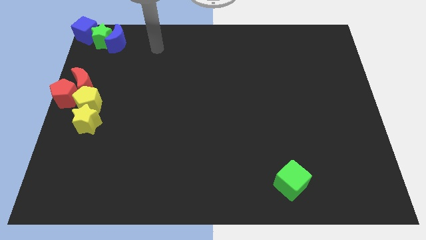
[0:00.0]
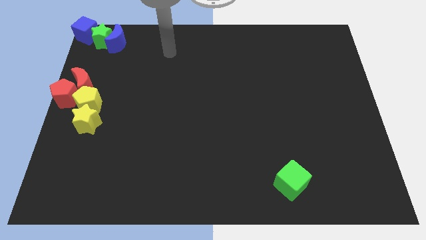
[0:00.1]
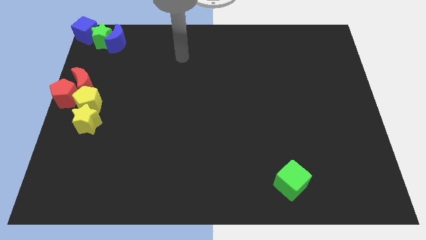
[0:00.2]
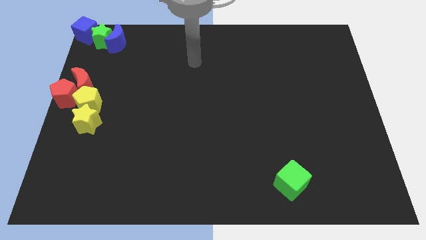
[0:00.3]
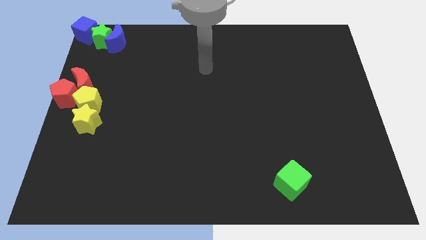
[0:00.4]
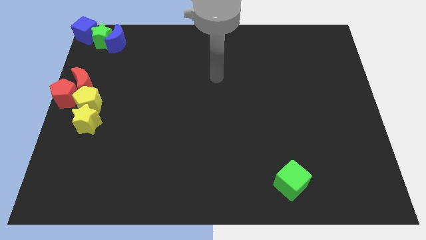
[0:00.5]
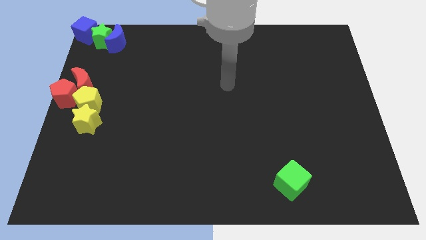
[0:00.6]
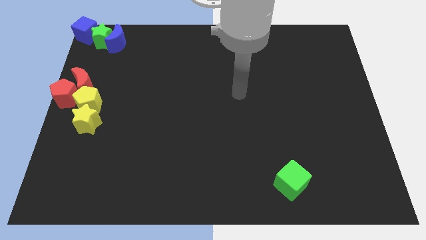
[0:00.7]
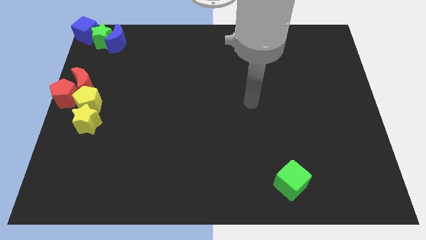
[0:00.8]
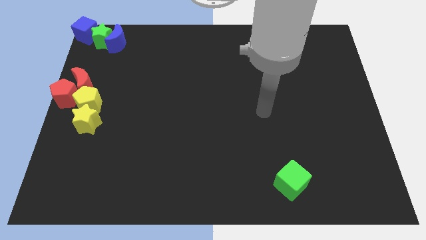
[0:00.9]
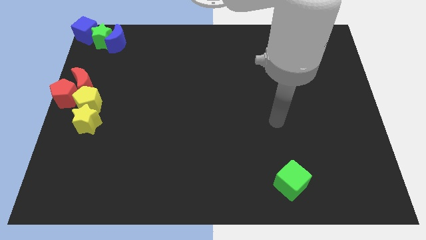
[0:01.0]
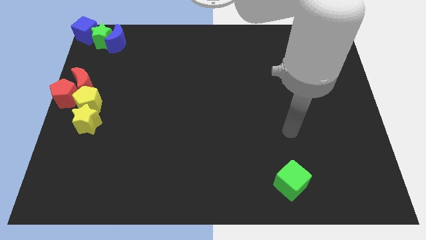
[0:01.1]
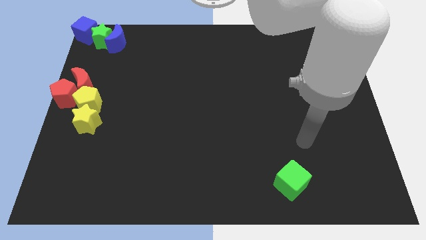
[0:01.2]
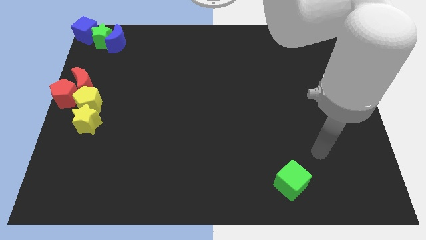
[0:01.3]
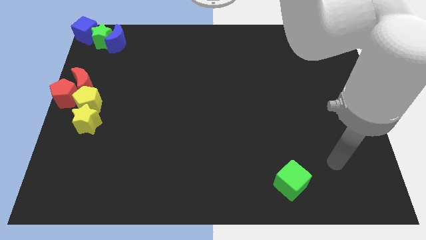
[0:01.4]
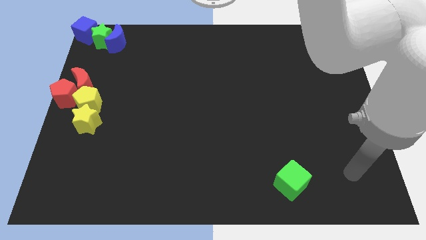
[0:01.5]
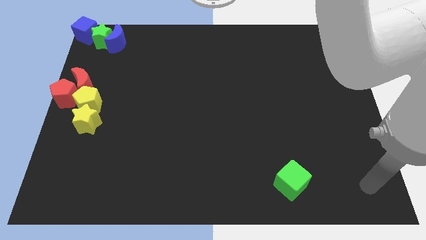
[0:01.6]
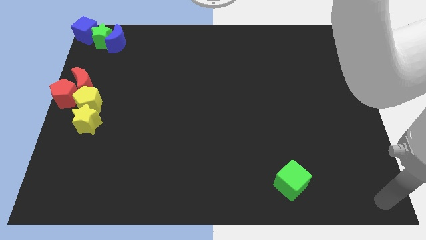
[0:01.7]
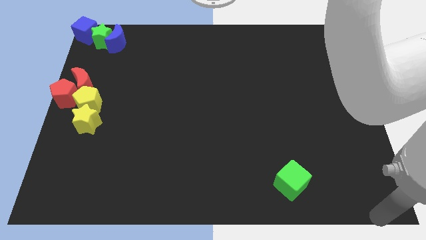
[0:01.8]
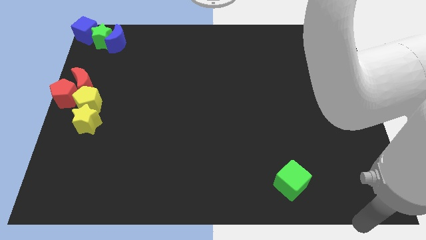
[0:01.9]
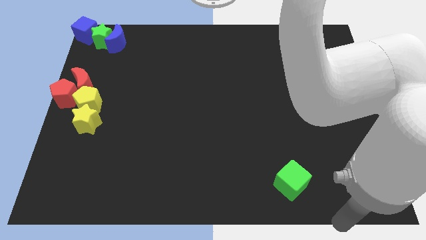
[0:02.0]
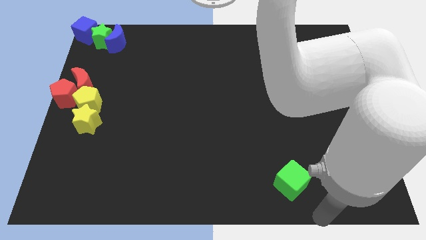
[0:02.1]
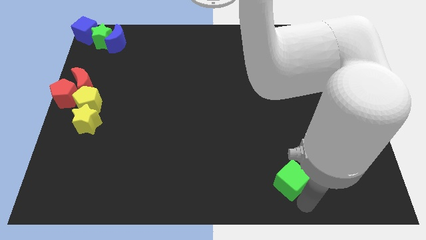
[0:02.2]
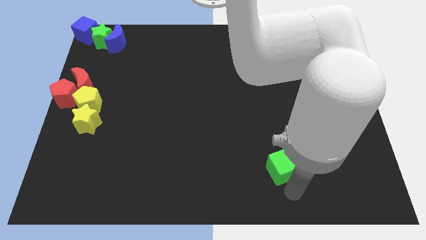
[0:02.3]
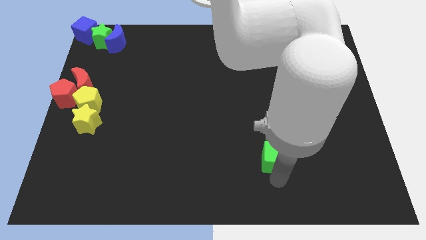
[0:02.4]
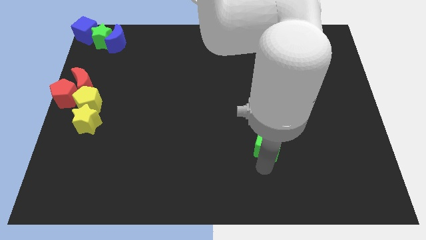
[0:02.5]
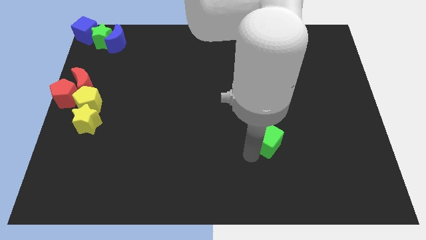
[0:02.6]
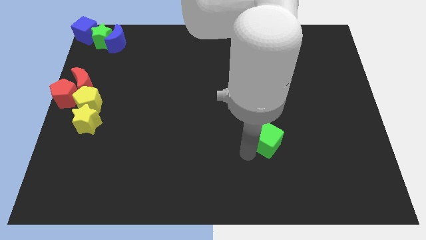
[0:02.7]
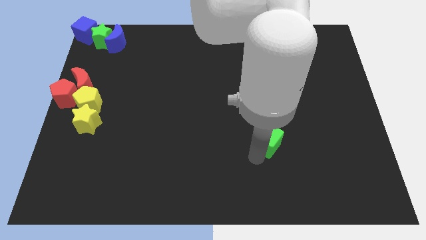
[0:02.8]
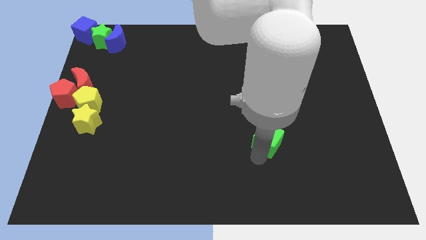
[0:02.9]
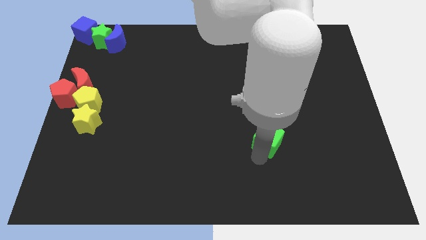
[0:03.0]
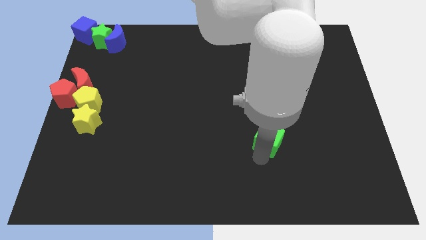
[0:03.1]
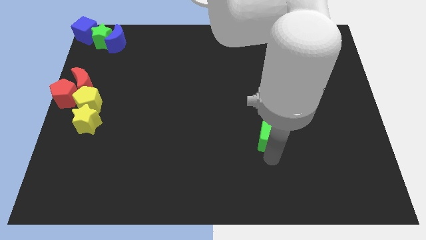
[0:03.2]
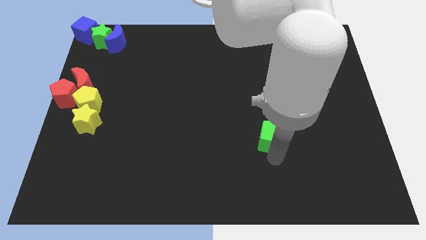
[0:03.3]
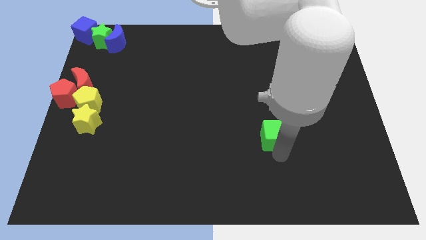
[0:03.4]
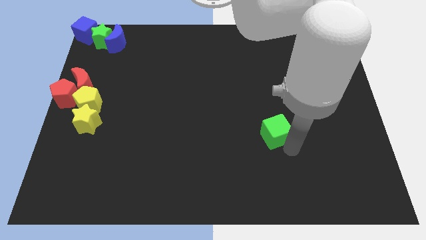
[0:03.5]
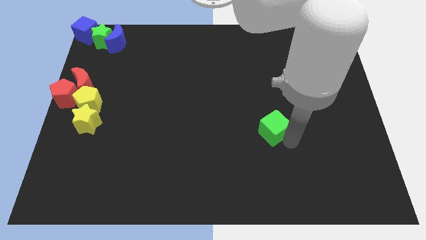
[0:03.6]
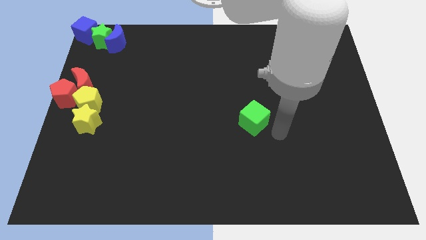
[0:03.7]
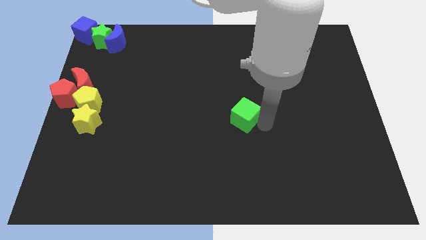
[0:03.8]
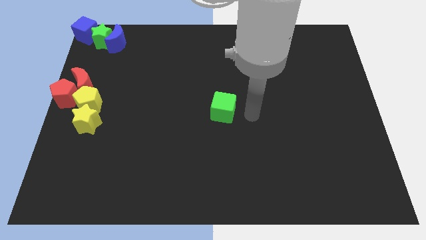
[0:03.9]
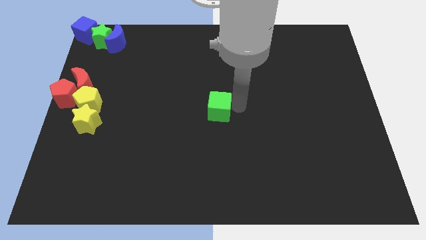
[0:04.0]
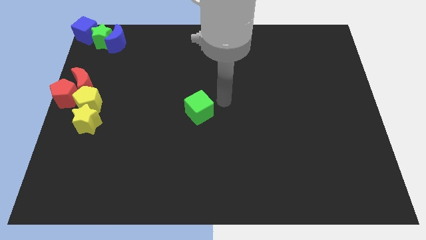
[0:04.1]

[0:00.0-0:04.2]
place the green cube at the center of the board

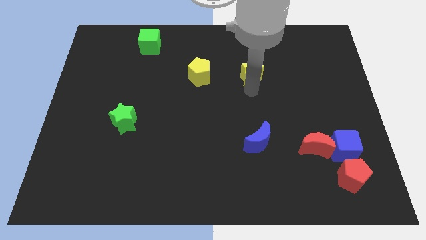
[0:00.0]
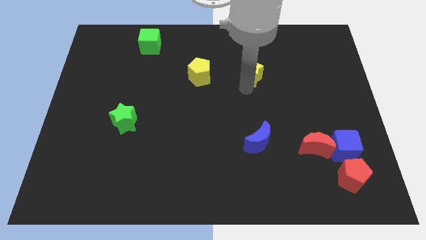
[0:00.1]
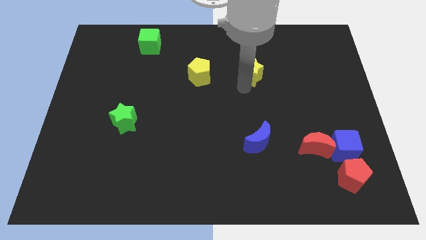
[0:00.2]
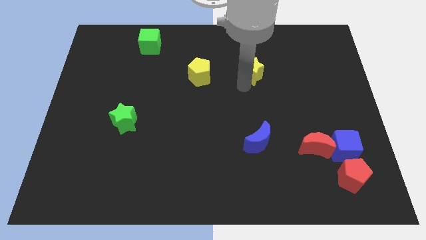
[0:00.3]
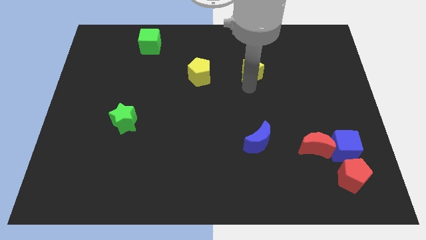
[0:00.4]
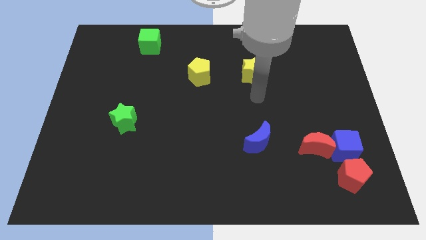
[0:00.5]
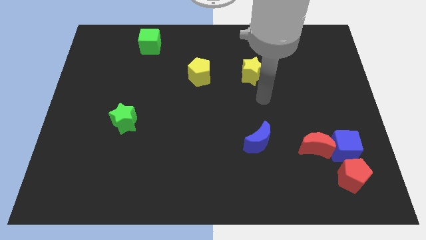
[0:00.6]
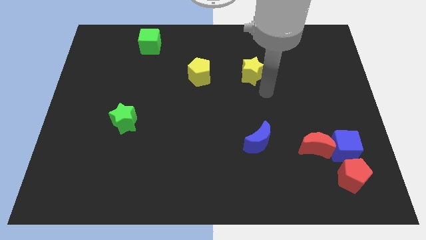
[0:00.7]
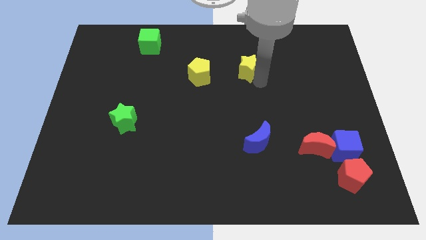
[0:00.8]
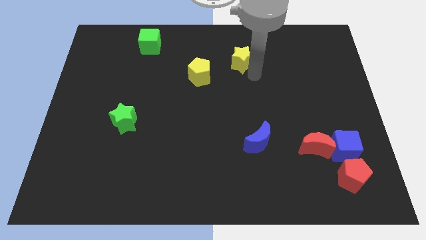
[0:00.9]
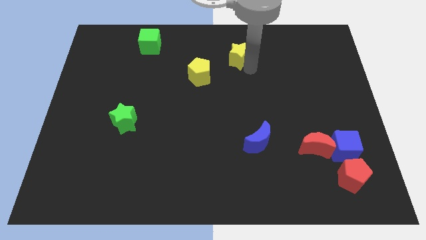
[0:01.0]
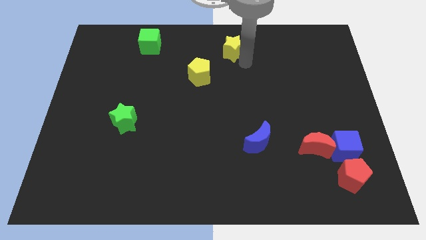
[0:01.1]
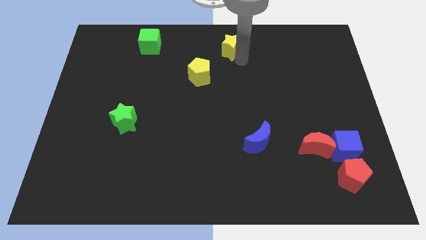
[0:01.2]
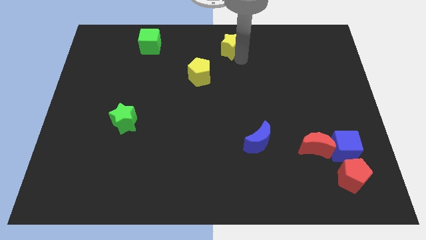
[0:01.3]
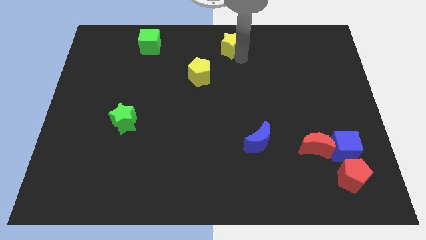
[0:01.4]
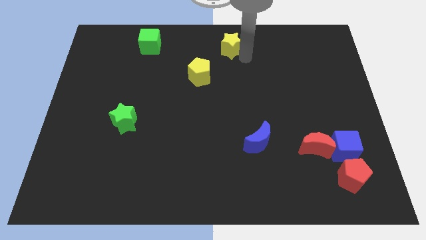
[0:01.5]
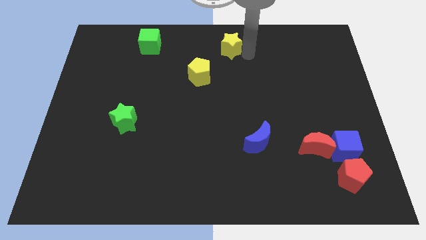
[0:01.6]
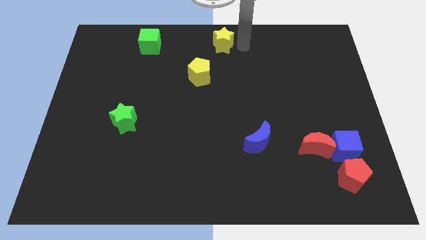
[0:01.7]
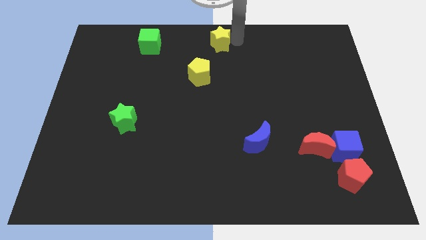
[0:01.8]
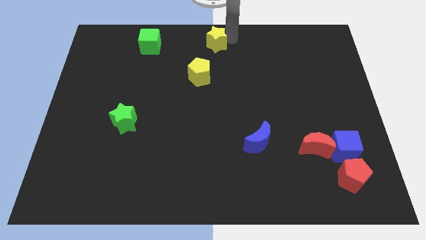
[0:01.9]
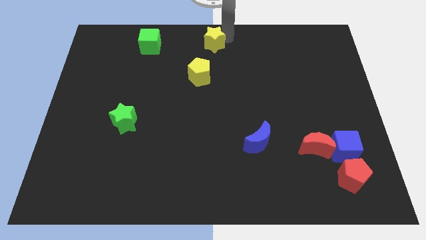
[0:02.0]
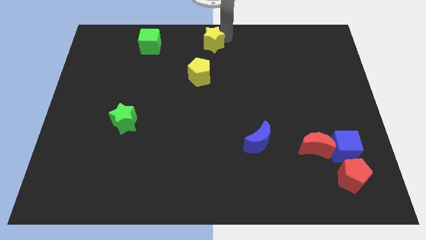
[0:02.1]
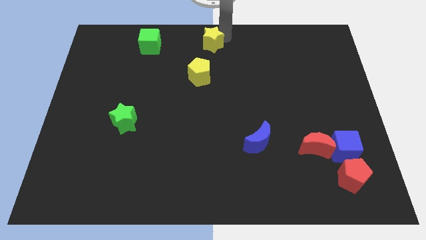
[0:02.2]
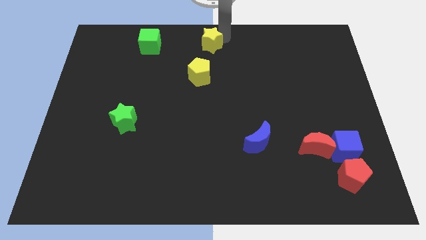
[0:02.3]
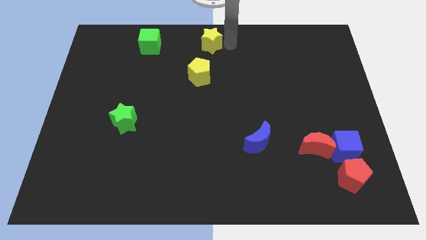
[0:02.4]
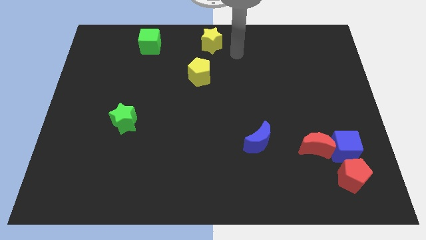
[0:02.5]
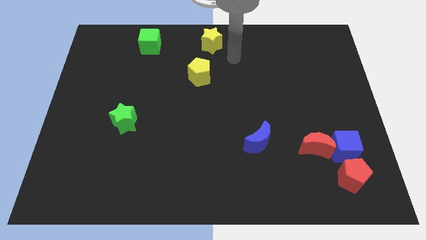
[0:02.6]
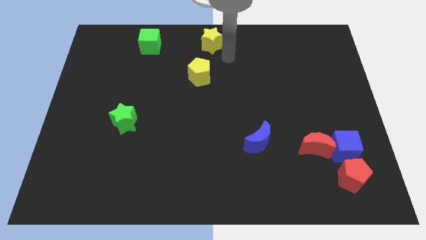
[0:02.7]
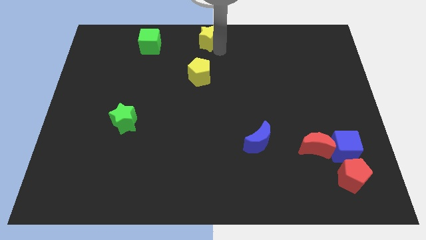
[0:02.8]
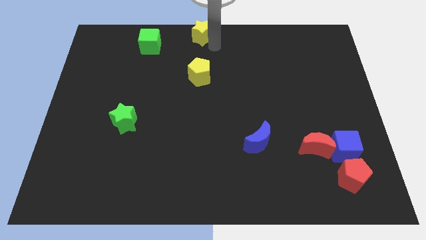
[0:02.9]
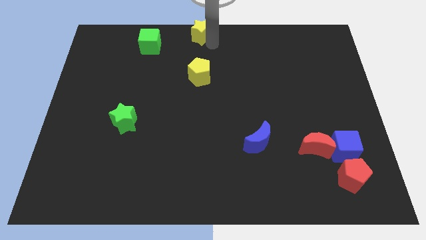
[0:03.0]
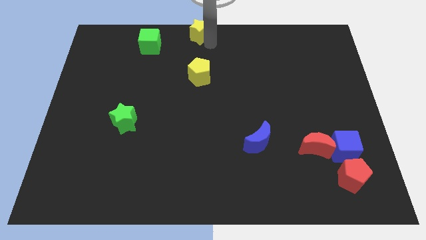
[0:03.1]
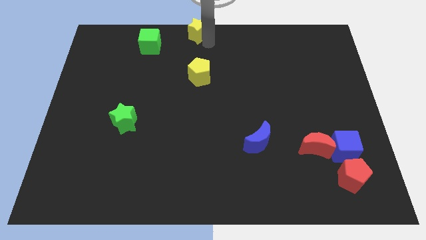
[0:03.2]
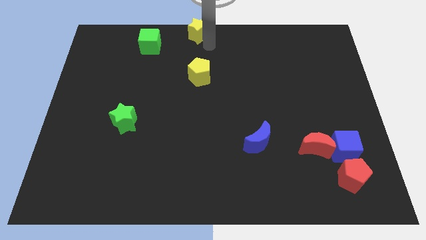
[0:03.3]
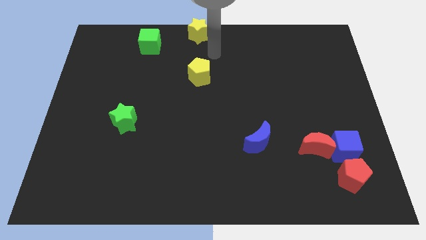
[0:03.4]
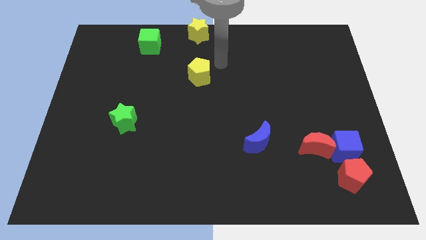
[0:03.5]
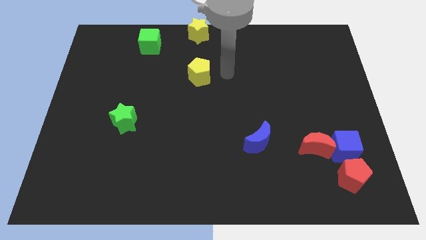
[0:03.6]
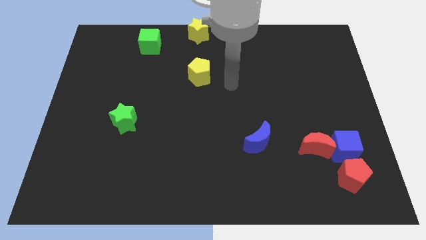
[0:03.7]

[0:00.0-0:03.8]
move the yellow star vertical to the yellow pentagon

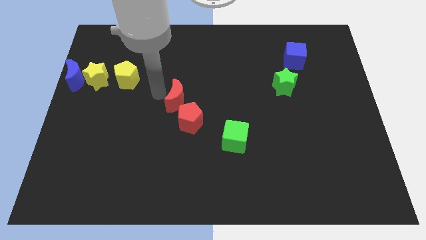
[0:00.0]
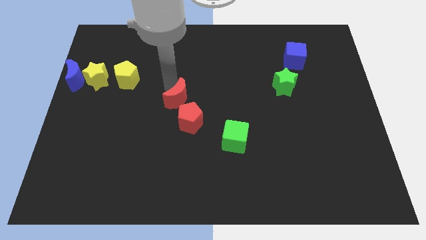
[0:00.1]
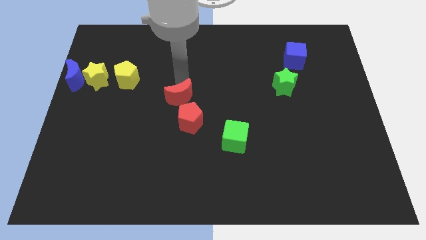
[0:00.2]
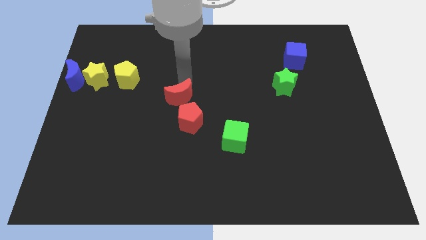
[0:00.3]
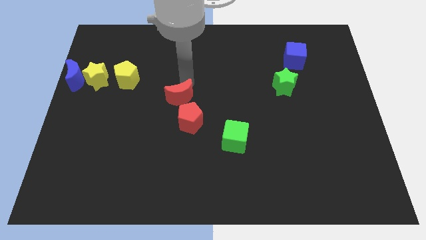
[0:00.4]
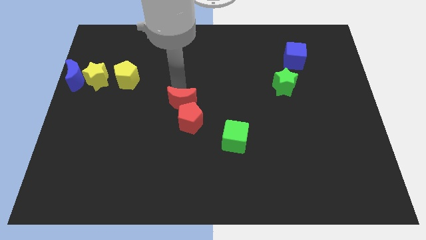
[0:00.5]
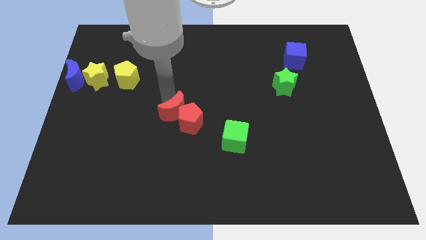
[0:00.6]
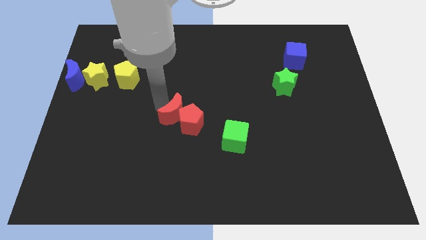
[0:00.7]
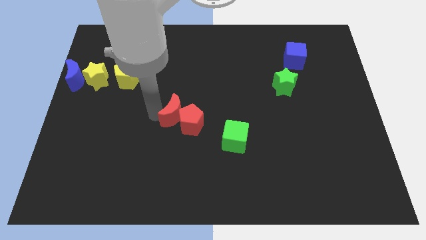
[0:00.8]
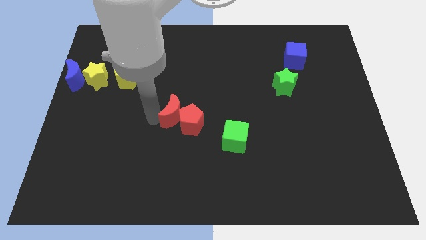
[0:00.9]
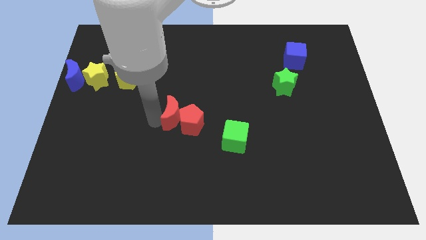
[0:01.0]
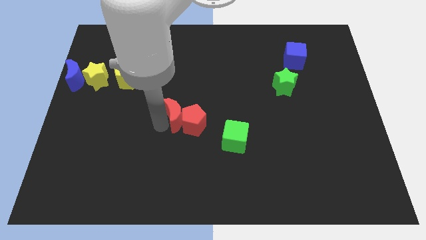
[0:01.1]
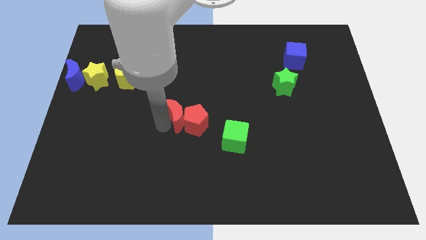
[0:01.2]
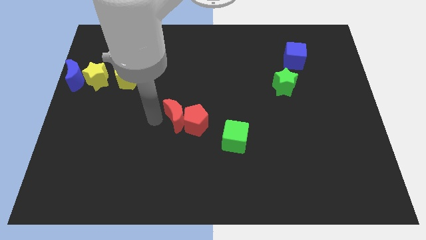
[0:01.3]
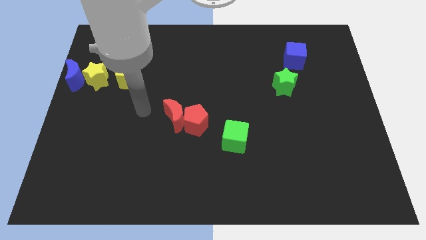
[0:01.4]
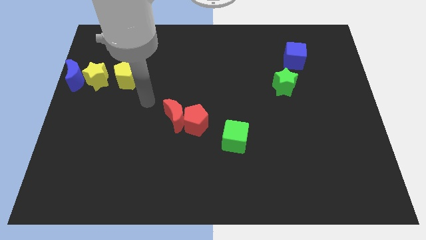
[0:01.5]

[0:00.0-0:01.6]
move the red moon close to the left to the red pentagon
